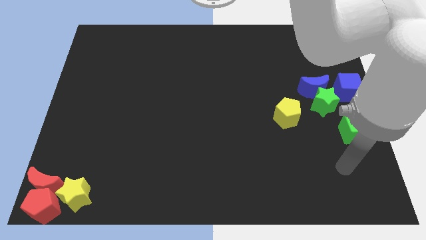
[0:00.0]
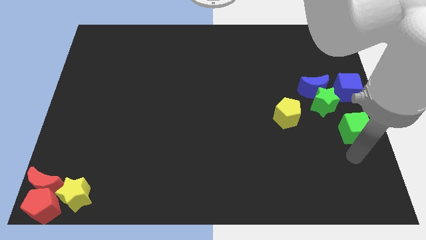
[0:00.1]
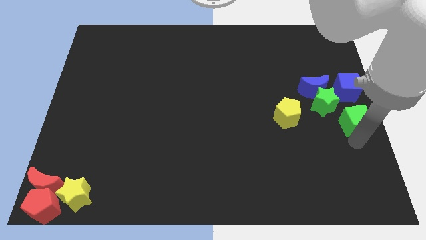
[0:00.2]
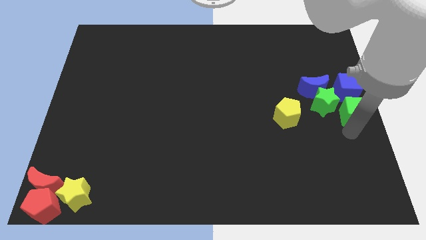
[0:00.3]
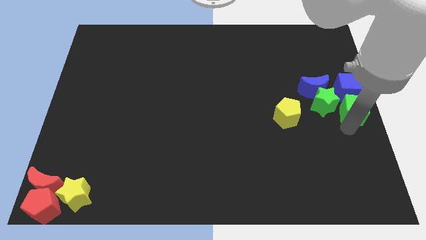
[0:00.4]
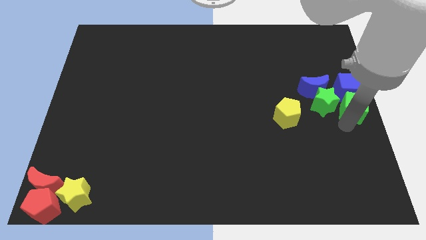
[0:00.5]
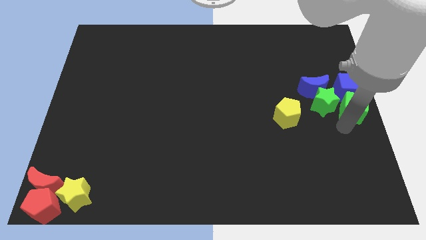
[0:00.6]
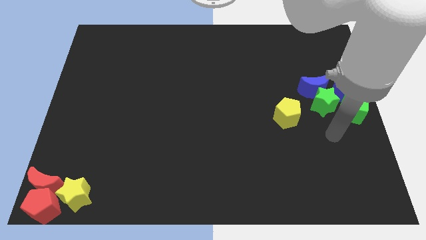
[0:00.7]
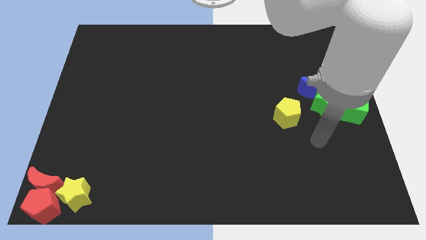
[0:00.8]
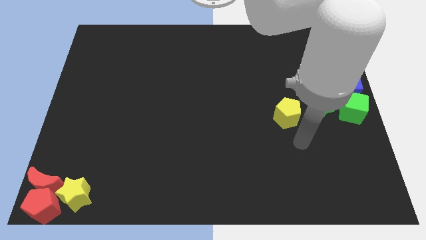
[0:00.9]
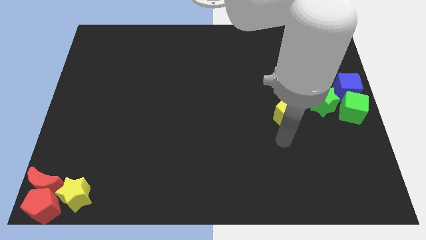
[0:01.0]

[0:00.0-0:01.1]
move the green cube vertically below the blue cube

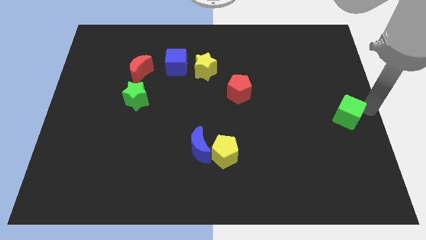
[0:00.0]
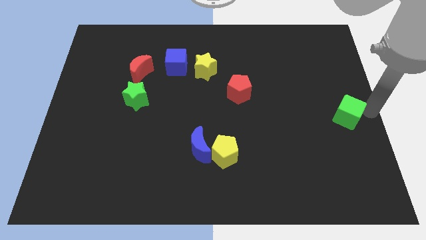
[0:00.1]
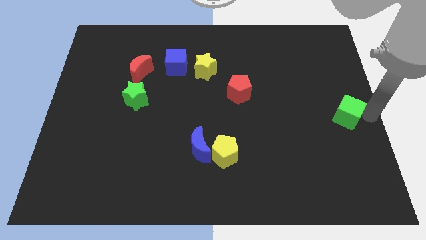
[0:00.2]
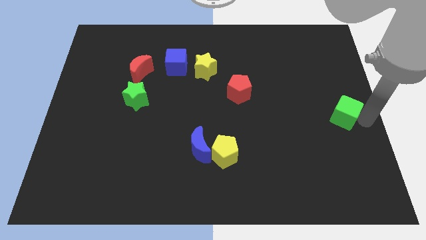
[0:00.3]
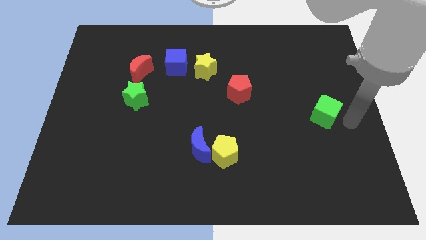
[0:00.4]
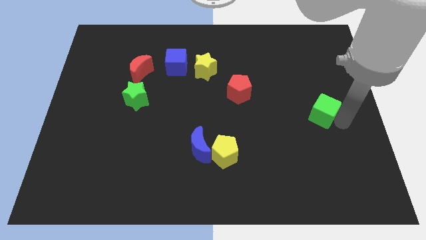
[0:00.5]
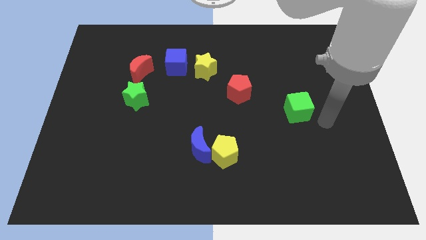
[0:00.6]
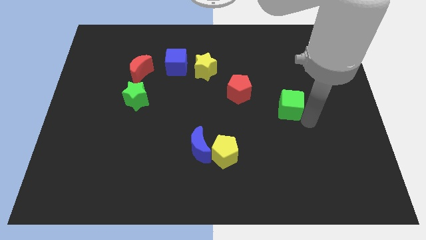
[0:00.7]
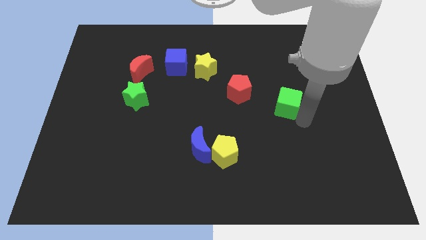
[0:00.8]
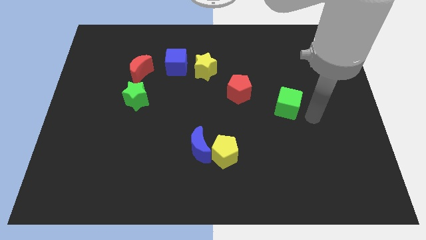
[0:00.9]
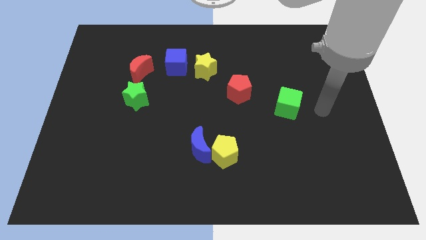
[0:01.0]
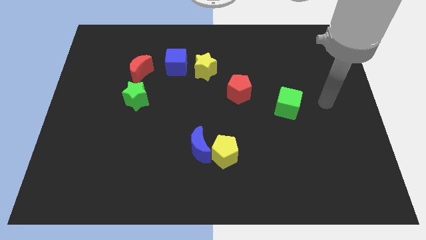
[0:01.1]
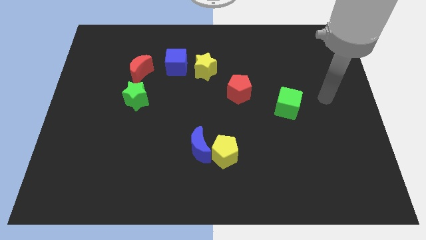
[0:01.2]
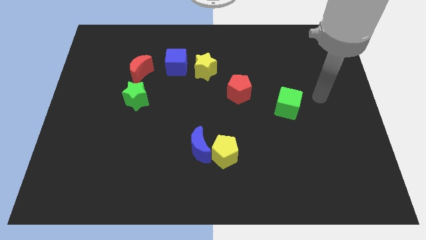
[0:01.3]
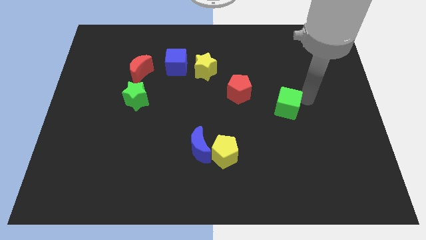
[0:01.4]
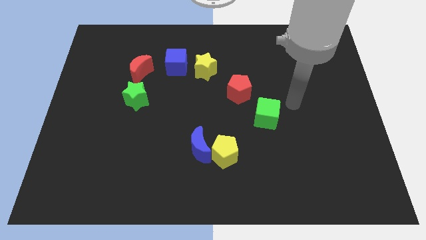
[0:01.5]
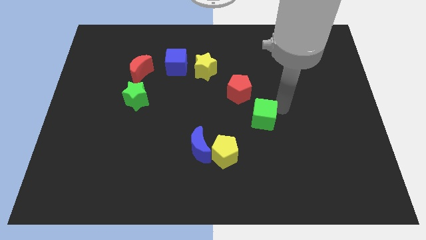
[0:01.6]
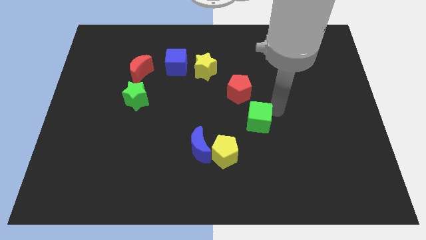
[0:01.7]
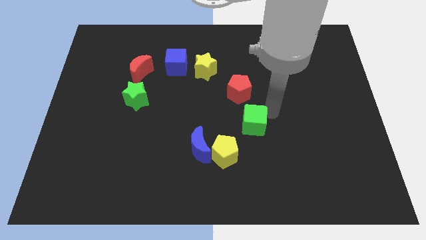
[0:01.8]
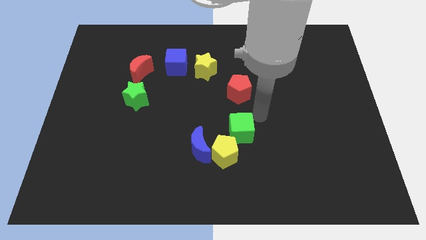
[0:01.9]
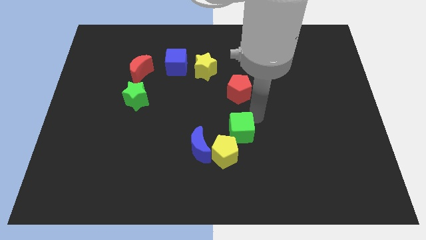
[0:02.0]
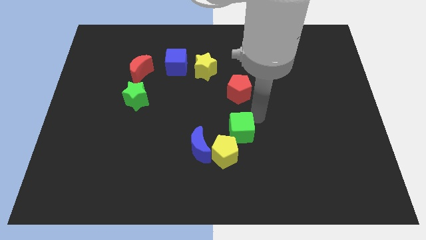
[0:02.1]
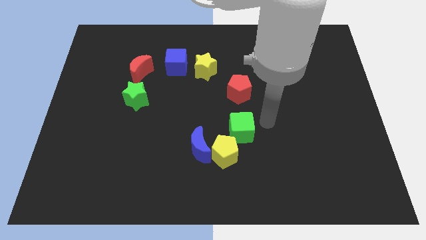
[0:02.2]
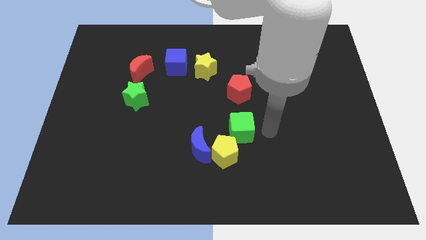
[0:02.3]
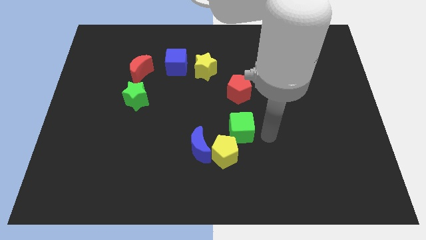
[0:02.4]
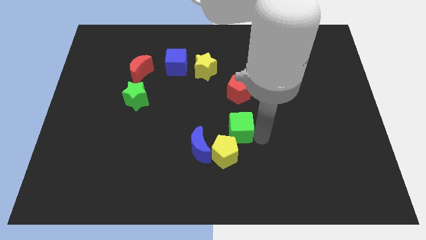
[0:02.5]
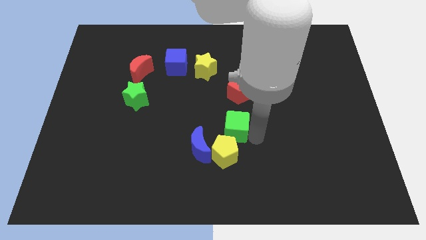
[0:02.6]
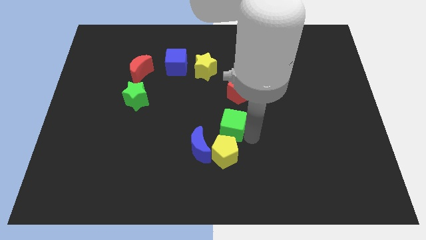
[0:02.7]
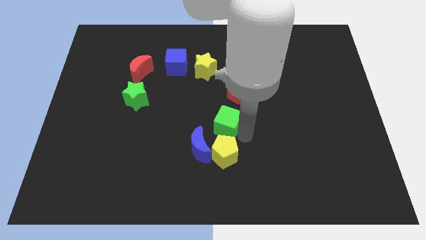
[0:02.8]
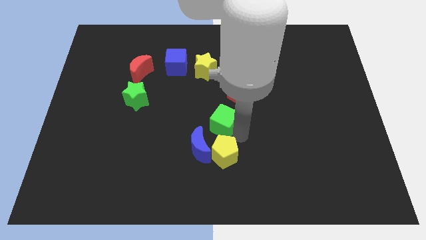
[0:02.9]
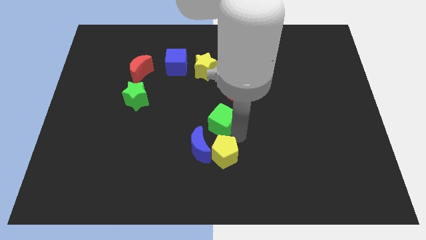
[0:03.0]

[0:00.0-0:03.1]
push the green cube below the red pentagon

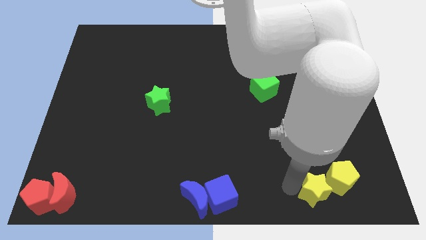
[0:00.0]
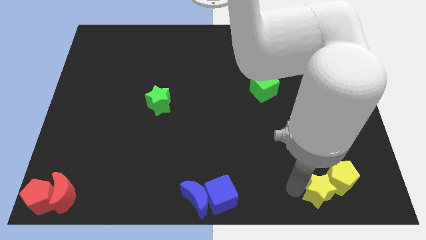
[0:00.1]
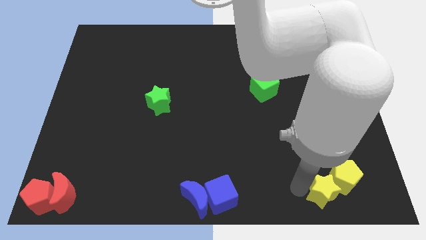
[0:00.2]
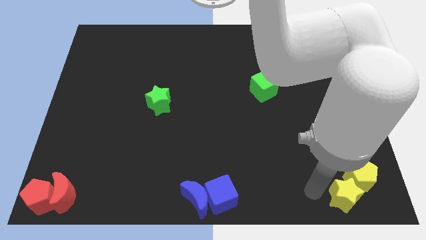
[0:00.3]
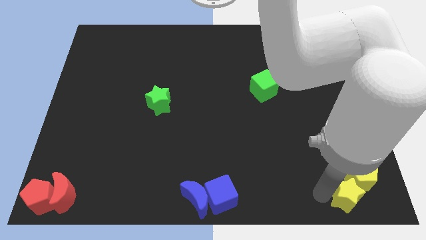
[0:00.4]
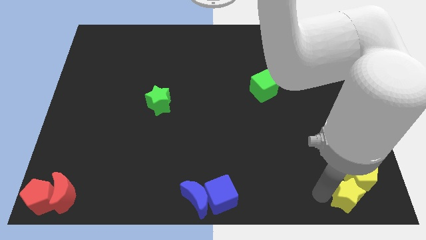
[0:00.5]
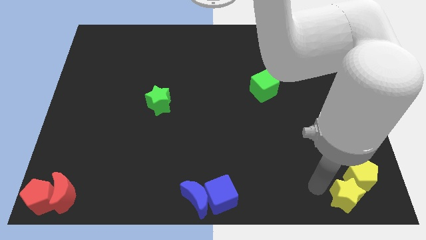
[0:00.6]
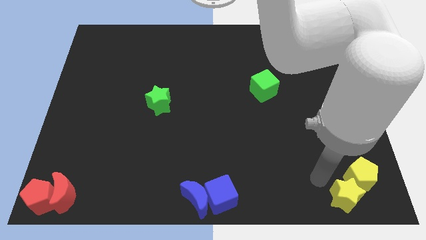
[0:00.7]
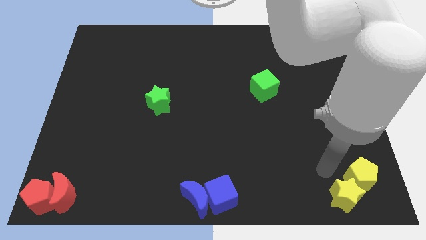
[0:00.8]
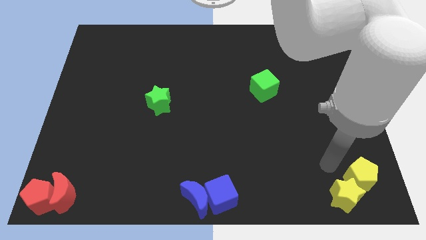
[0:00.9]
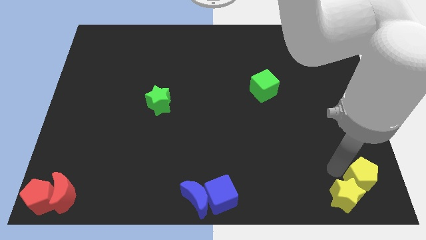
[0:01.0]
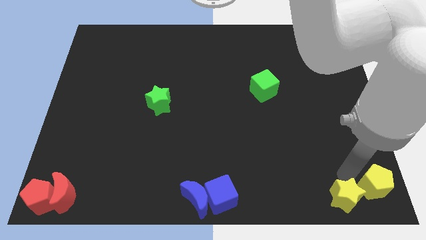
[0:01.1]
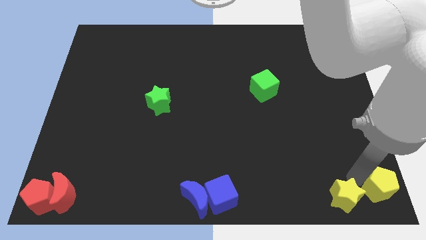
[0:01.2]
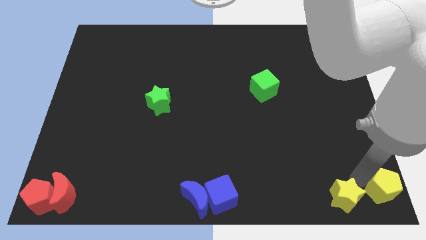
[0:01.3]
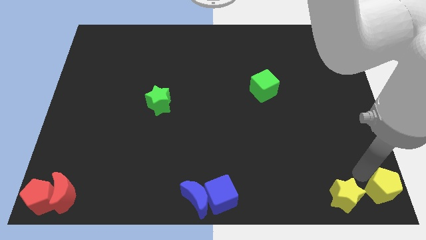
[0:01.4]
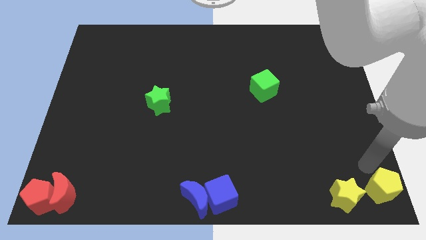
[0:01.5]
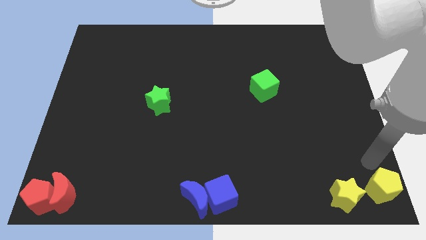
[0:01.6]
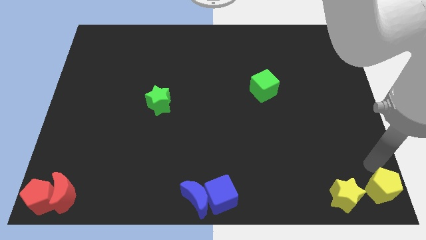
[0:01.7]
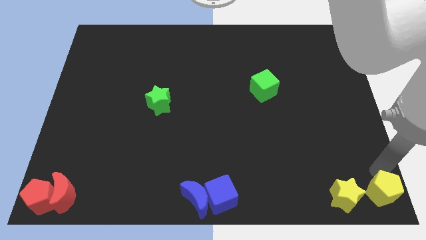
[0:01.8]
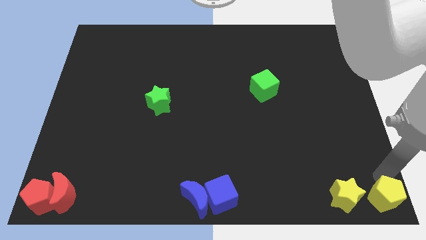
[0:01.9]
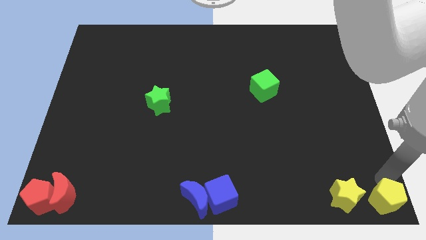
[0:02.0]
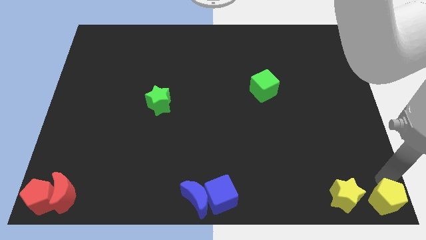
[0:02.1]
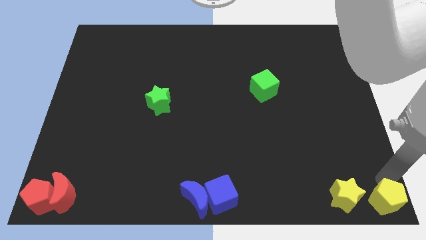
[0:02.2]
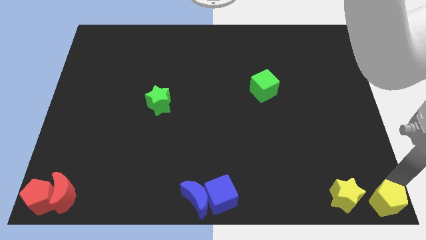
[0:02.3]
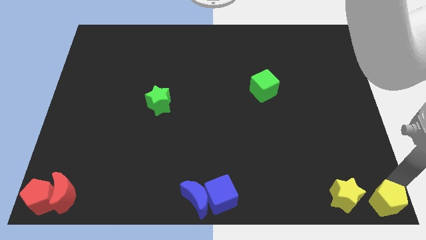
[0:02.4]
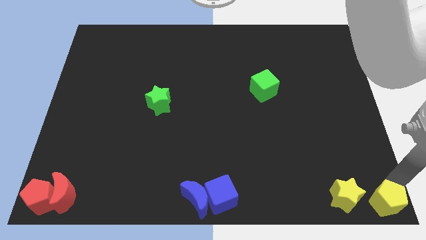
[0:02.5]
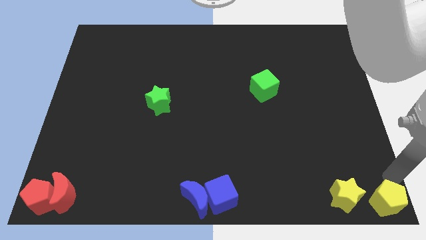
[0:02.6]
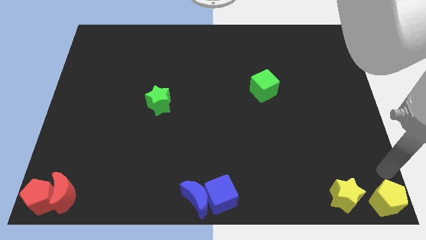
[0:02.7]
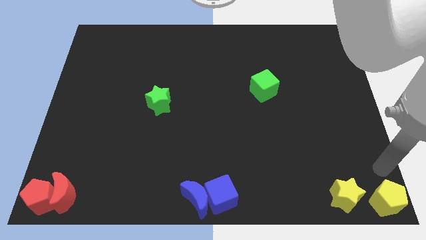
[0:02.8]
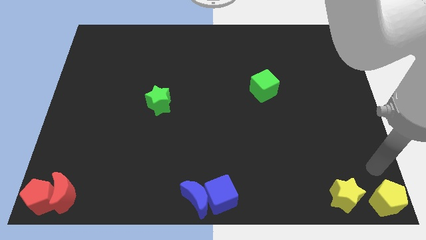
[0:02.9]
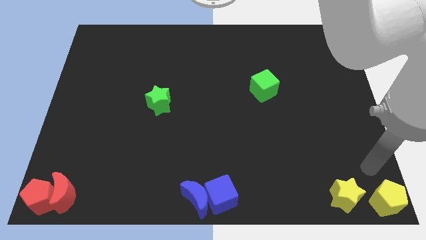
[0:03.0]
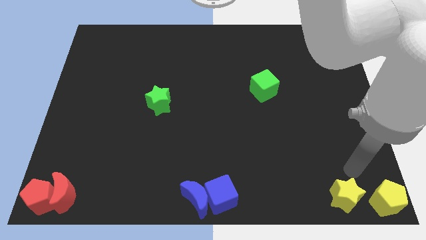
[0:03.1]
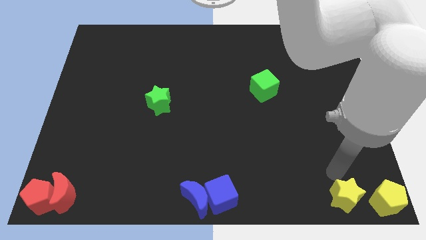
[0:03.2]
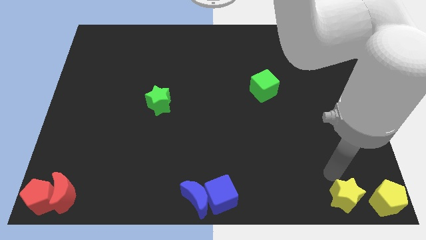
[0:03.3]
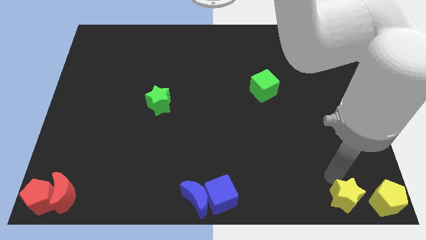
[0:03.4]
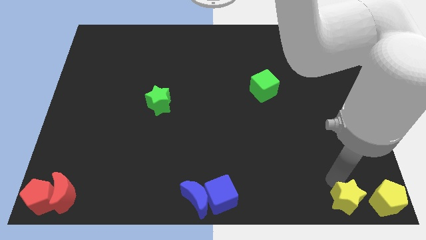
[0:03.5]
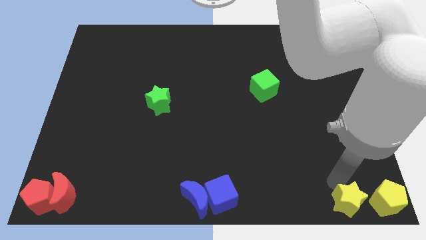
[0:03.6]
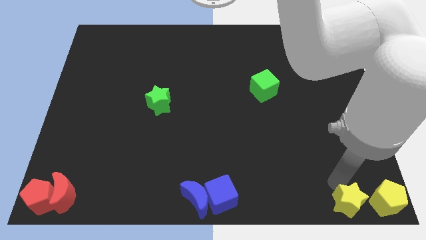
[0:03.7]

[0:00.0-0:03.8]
move yellow star and yellow pentagon to the bottom right corner of the board

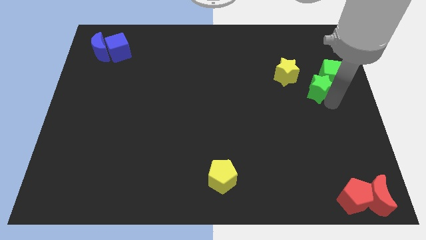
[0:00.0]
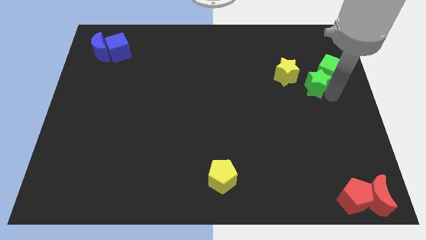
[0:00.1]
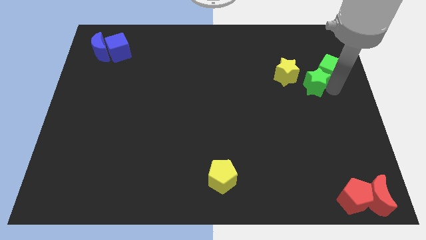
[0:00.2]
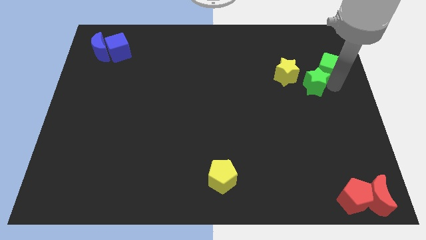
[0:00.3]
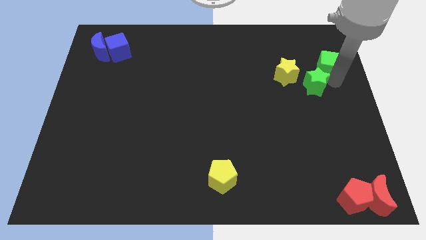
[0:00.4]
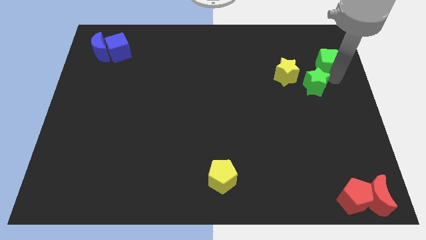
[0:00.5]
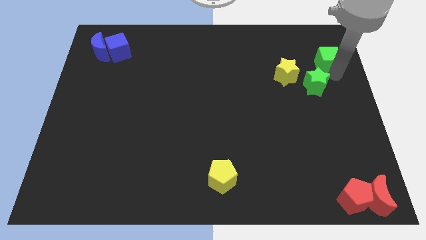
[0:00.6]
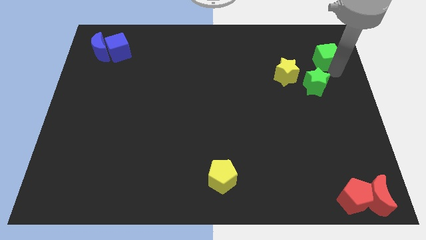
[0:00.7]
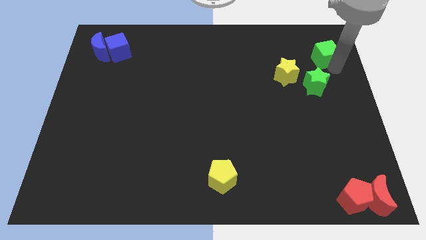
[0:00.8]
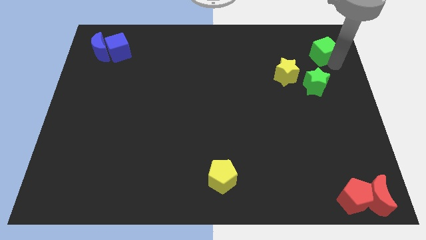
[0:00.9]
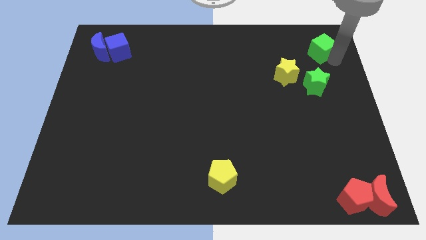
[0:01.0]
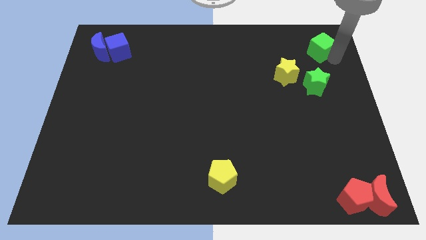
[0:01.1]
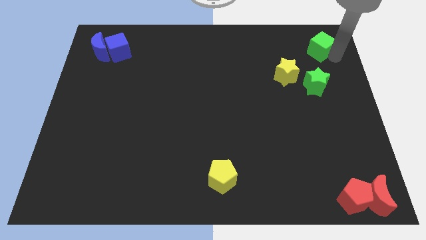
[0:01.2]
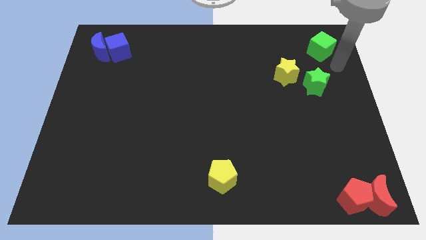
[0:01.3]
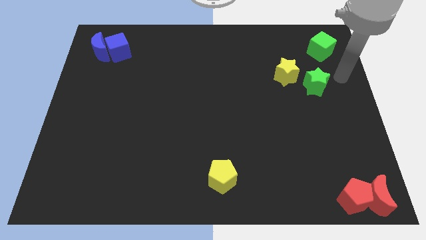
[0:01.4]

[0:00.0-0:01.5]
separate the green cube from the green star
